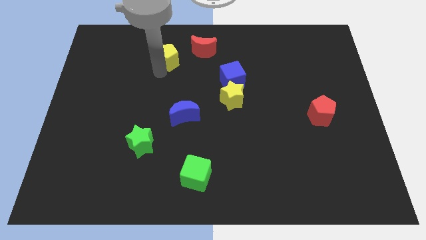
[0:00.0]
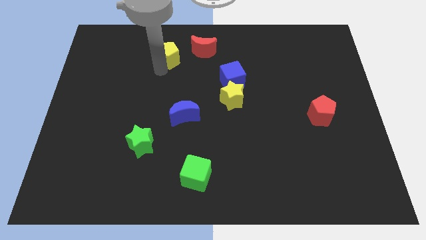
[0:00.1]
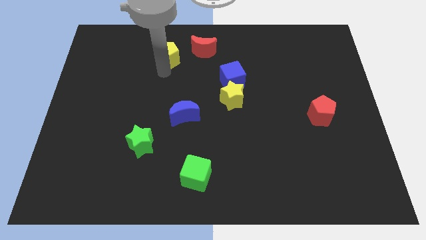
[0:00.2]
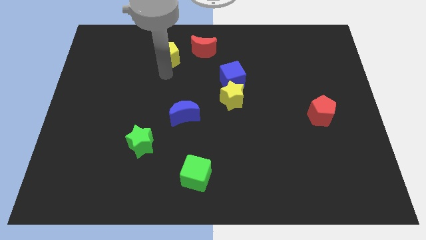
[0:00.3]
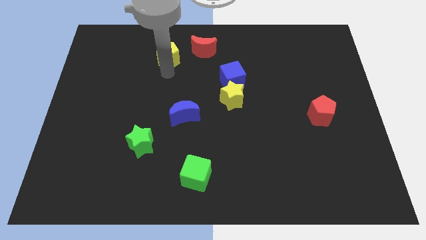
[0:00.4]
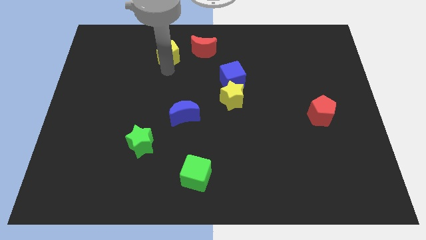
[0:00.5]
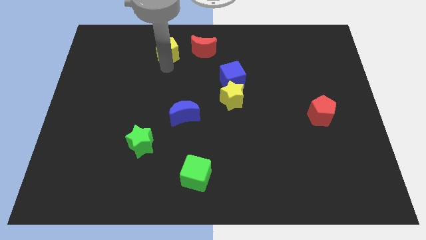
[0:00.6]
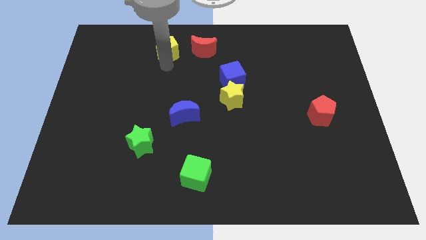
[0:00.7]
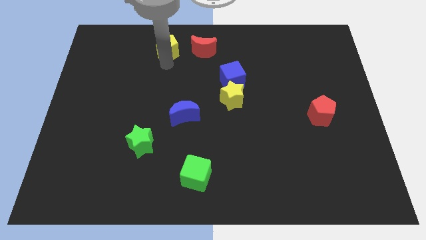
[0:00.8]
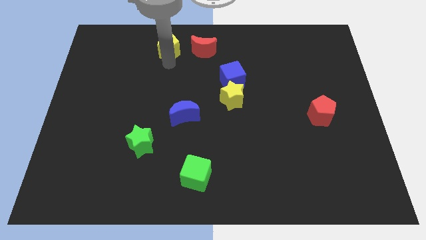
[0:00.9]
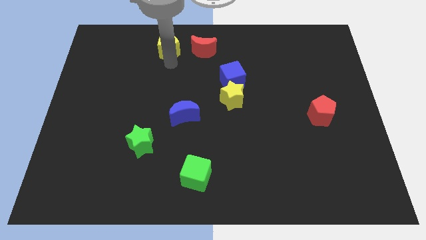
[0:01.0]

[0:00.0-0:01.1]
place yellow pentagon parallel to the left of red moon

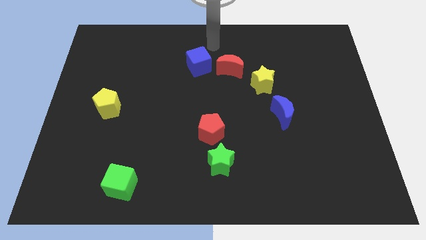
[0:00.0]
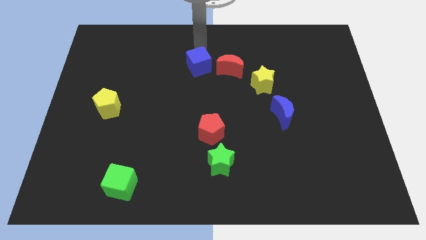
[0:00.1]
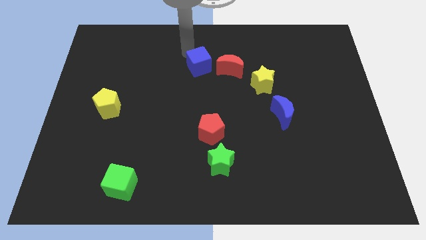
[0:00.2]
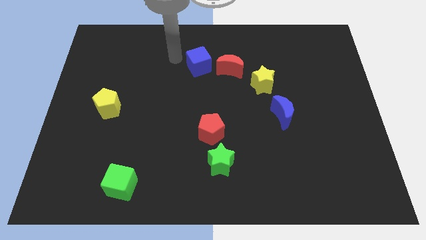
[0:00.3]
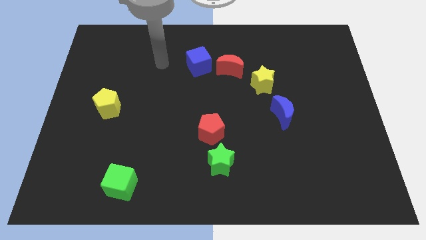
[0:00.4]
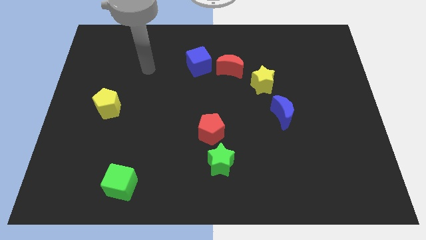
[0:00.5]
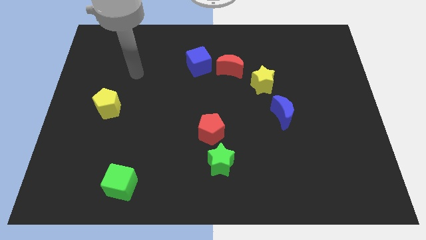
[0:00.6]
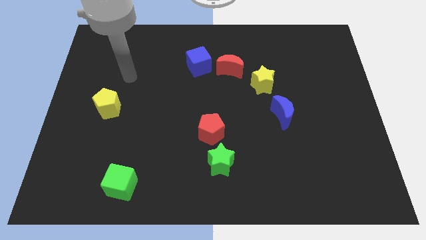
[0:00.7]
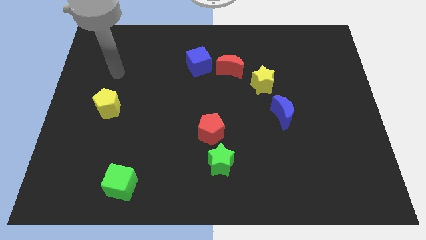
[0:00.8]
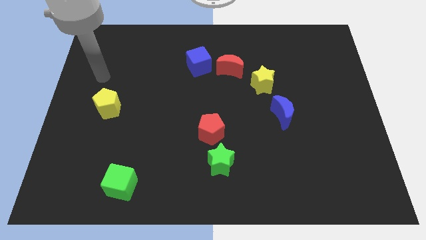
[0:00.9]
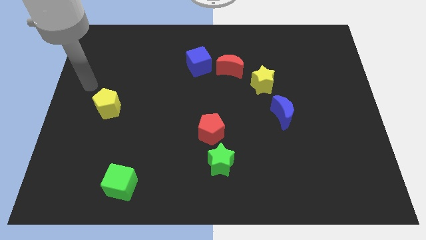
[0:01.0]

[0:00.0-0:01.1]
place your arm towards the yellow pentagon

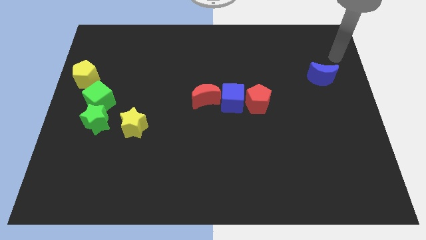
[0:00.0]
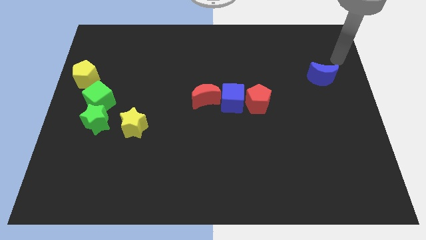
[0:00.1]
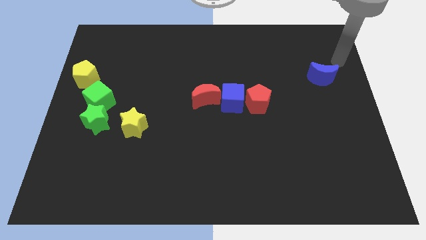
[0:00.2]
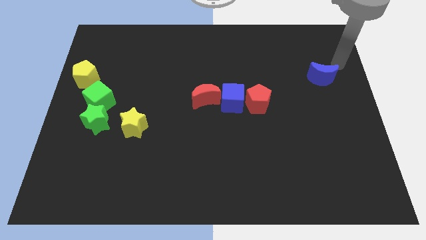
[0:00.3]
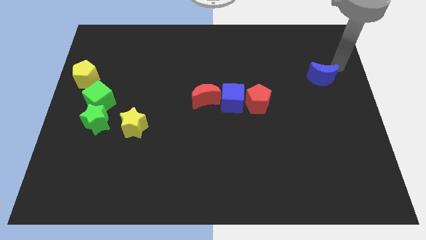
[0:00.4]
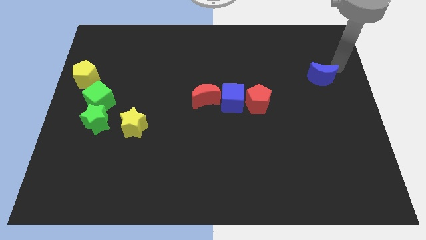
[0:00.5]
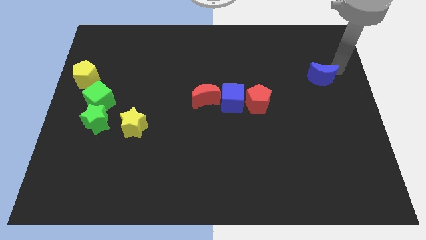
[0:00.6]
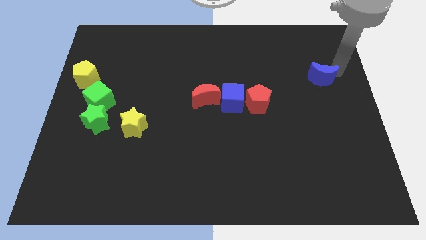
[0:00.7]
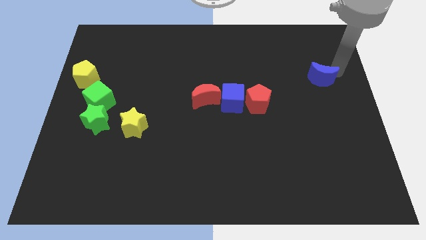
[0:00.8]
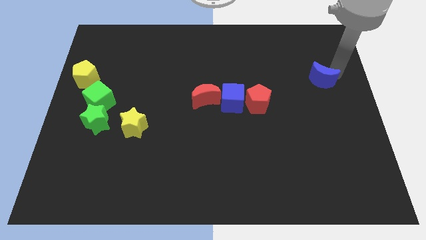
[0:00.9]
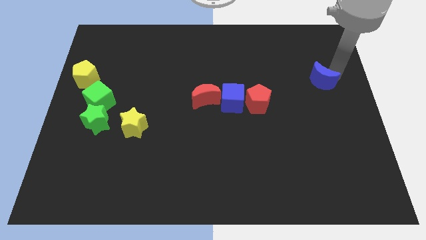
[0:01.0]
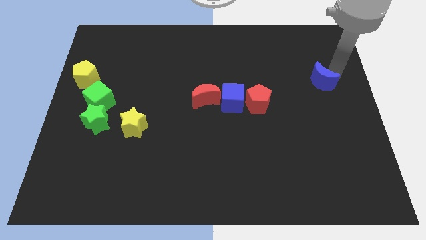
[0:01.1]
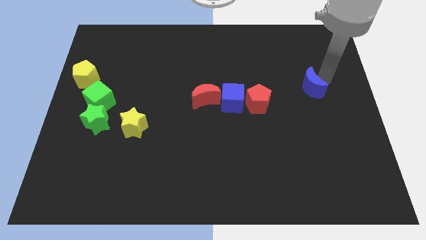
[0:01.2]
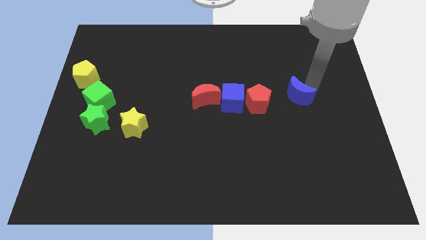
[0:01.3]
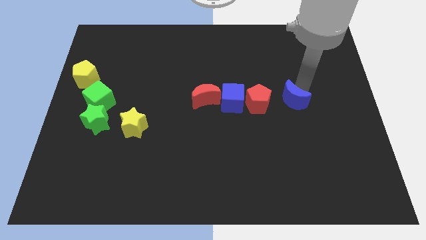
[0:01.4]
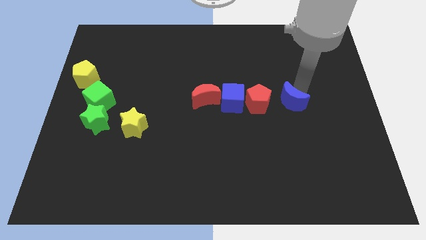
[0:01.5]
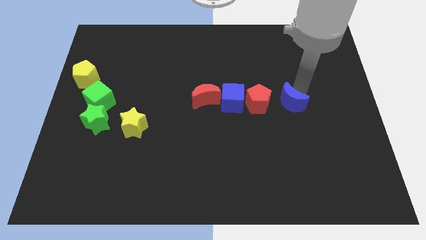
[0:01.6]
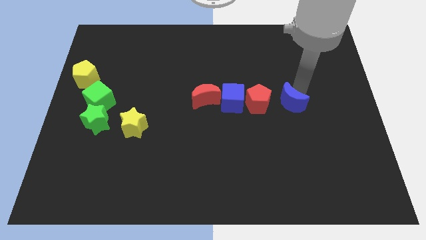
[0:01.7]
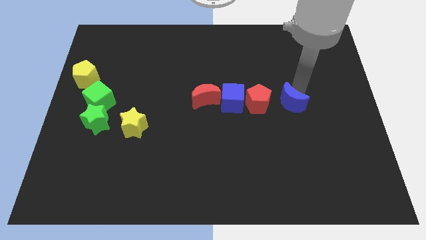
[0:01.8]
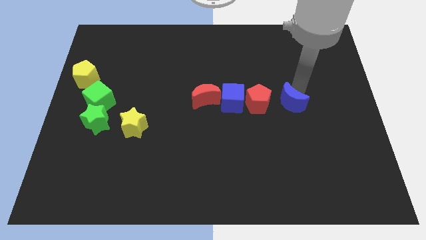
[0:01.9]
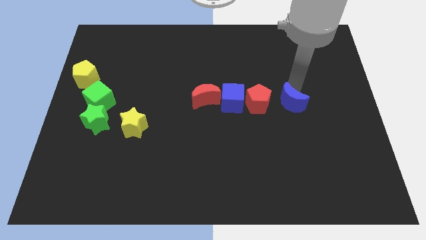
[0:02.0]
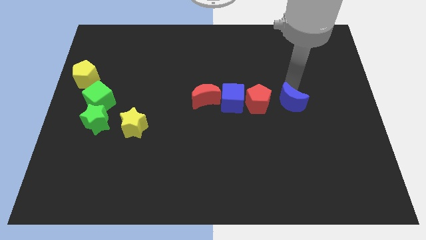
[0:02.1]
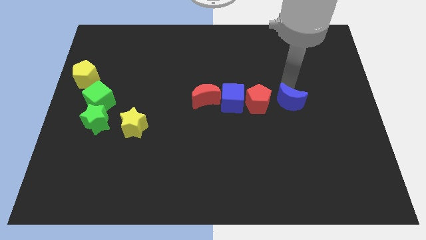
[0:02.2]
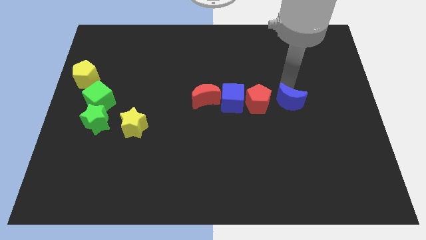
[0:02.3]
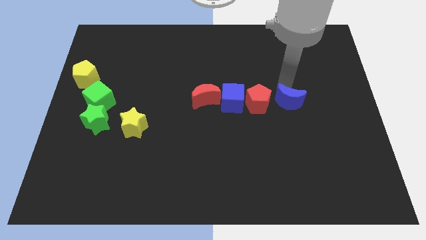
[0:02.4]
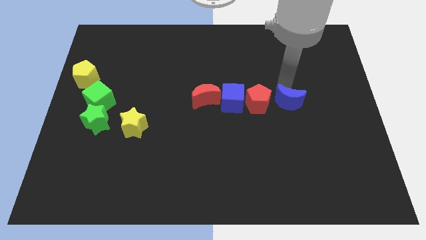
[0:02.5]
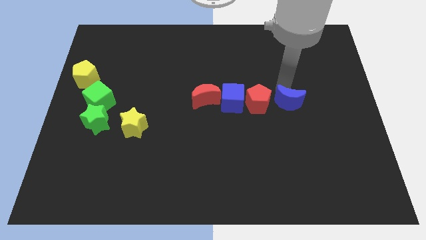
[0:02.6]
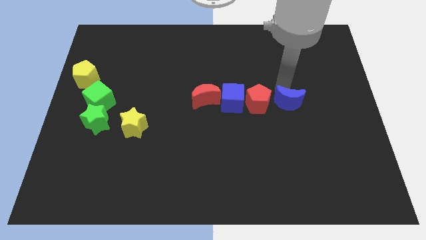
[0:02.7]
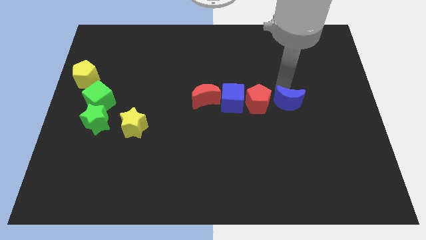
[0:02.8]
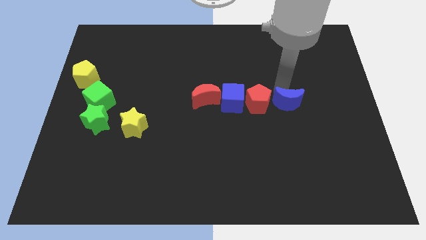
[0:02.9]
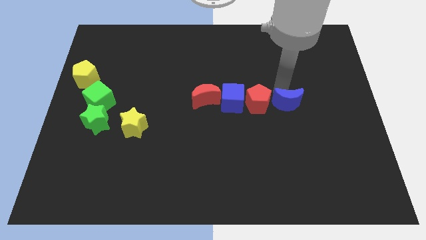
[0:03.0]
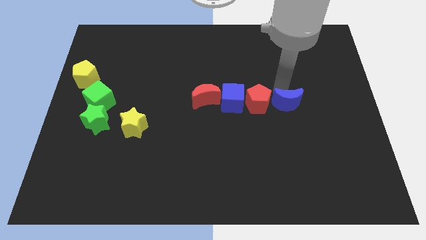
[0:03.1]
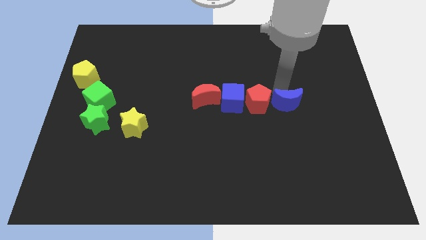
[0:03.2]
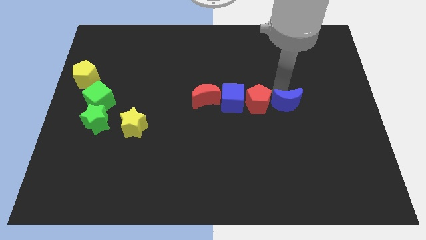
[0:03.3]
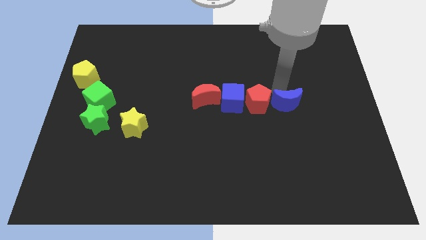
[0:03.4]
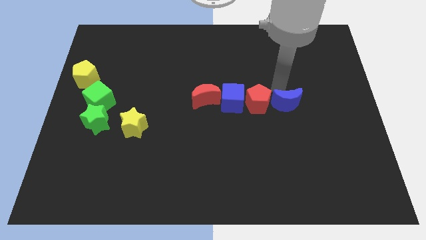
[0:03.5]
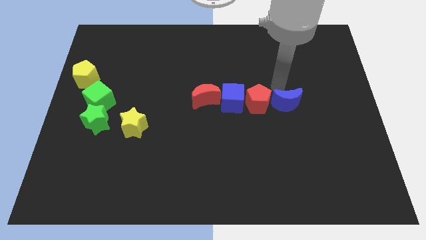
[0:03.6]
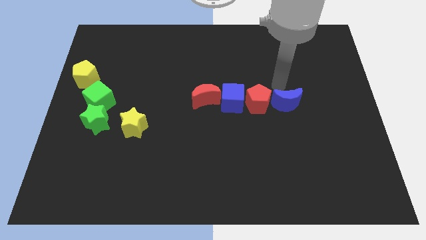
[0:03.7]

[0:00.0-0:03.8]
place blue crescent to the right of red pentagon

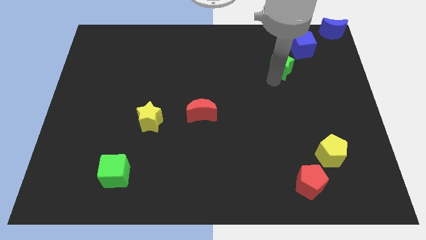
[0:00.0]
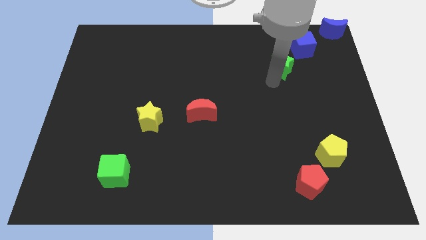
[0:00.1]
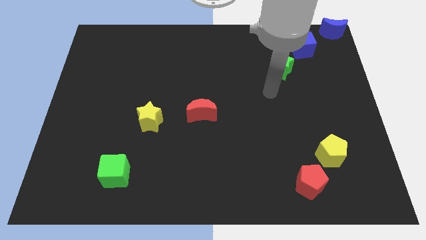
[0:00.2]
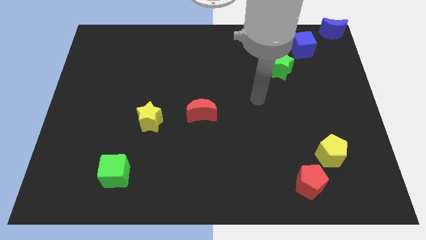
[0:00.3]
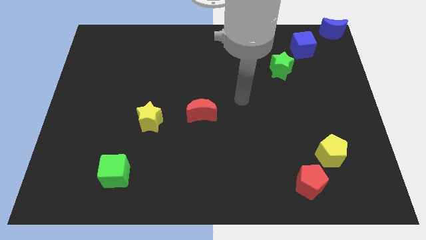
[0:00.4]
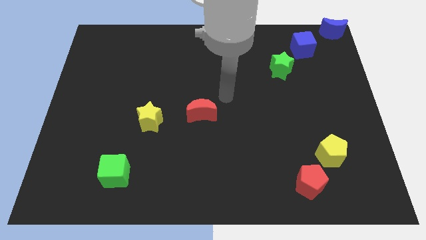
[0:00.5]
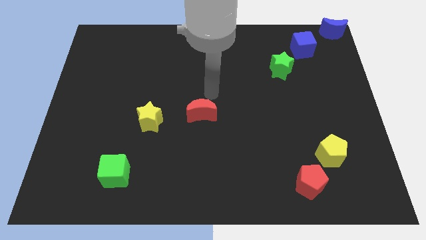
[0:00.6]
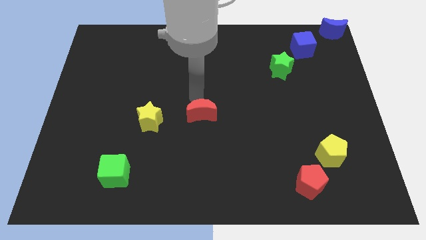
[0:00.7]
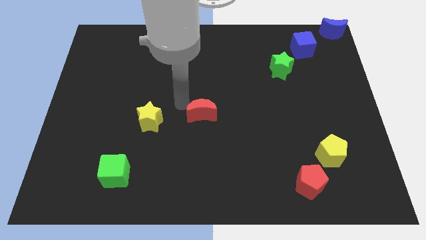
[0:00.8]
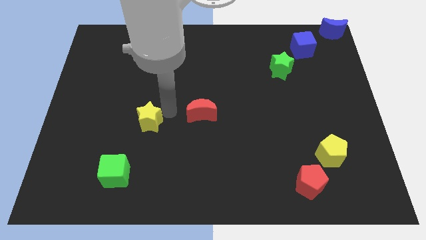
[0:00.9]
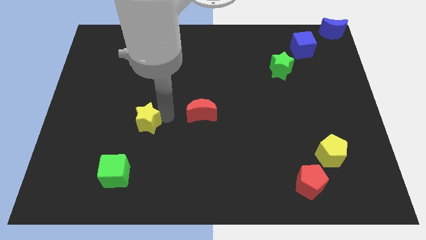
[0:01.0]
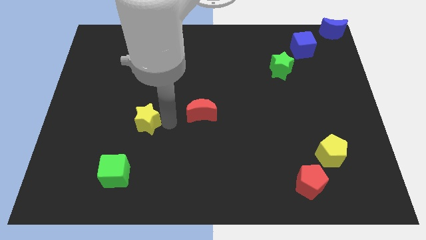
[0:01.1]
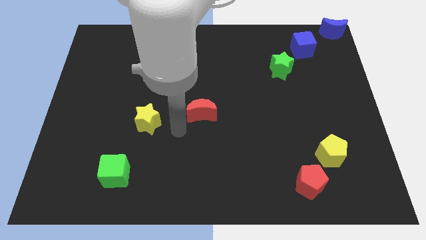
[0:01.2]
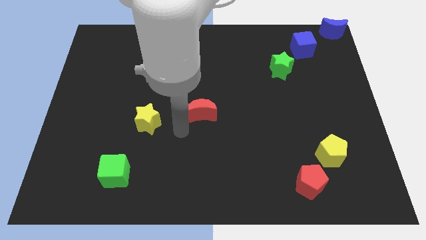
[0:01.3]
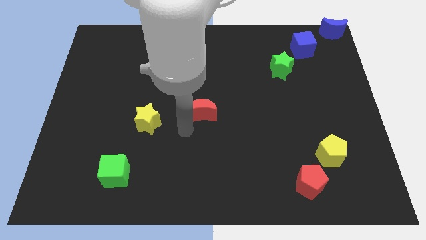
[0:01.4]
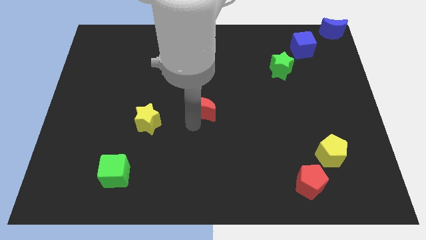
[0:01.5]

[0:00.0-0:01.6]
touch the bottom side of the red moon

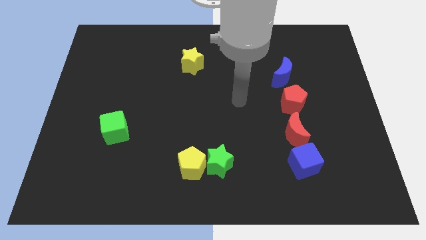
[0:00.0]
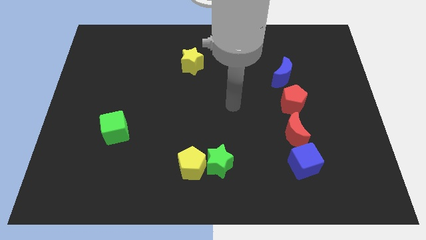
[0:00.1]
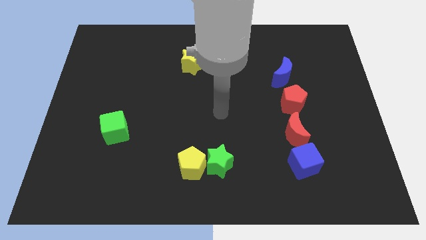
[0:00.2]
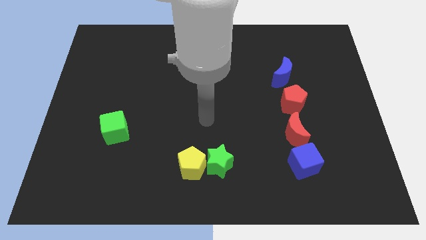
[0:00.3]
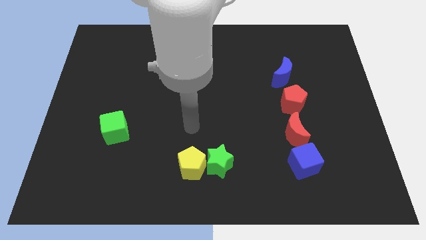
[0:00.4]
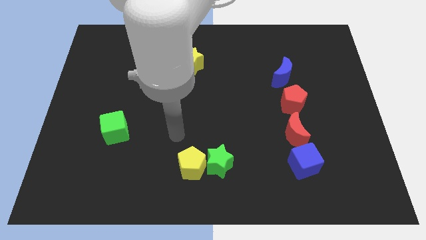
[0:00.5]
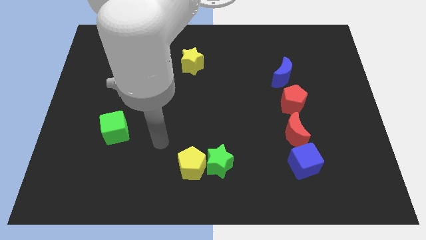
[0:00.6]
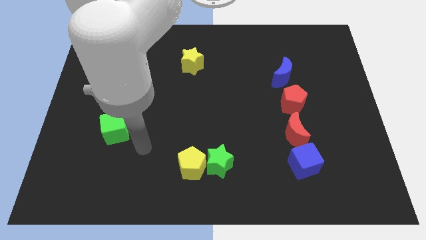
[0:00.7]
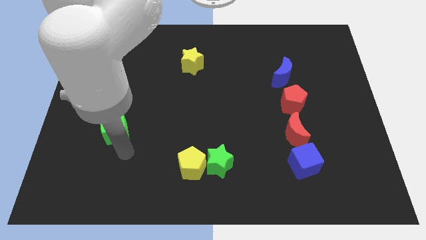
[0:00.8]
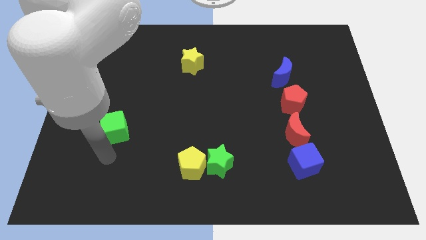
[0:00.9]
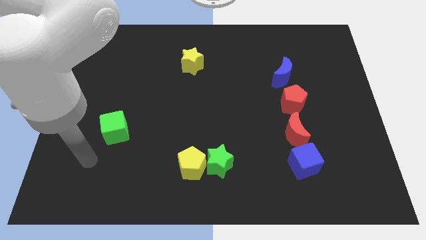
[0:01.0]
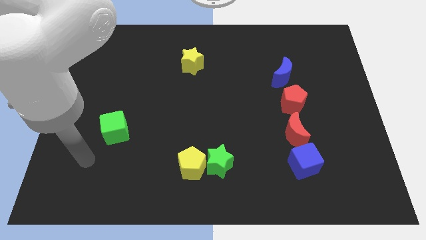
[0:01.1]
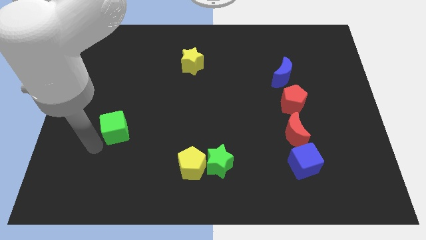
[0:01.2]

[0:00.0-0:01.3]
move your arm towards the green cube

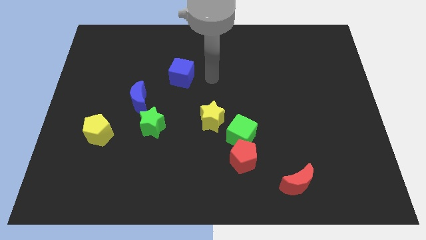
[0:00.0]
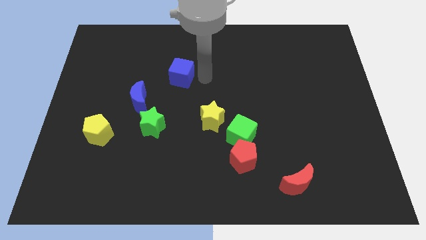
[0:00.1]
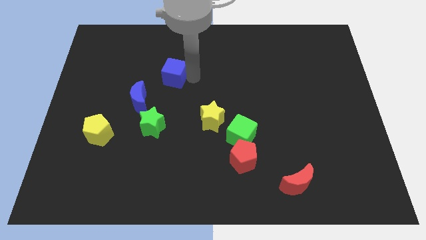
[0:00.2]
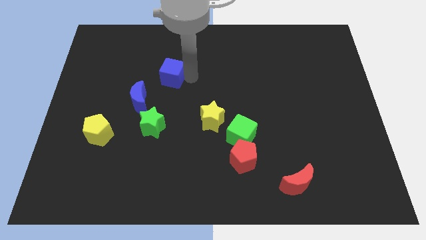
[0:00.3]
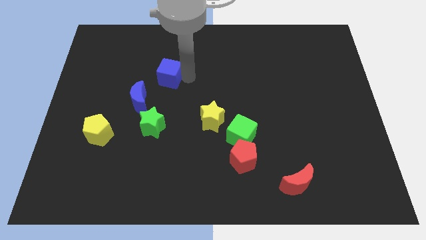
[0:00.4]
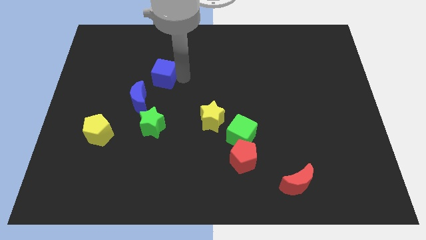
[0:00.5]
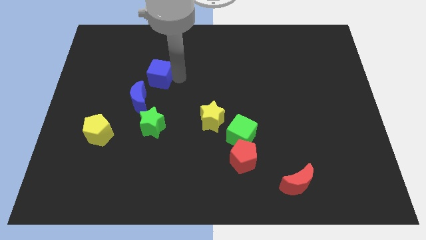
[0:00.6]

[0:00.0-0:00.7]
push the blue cube close to the blue crescent
